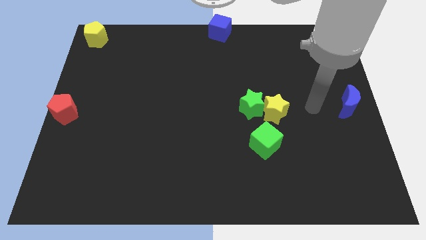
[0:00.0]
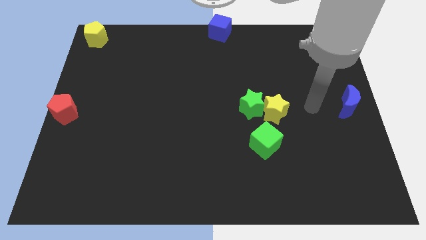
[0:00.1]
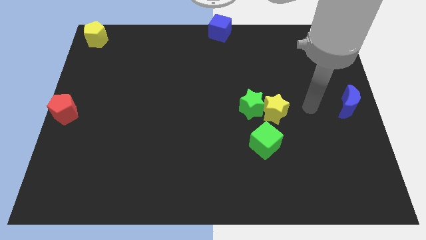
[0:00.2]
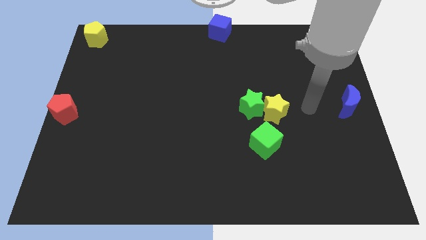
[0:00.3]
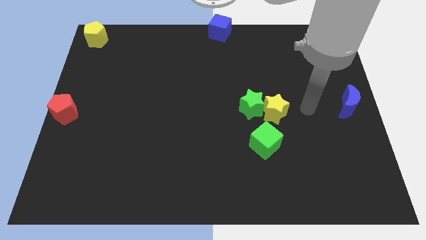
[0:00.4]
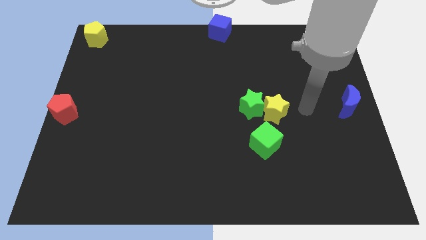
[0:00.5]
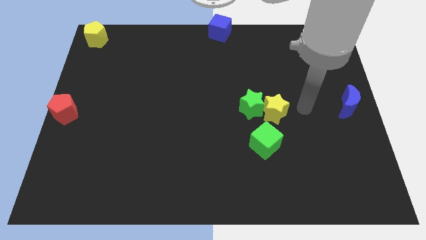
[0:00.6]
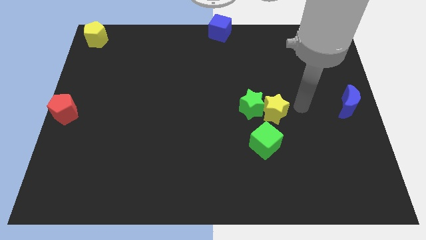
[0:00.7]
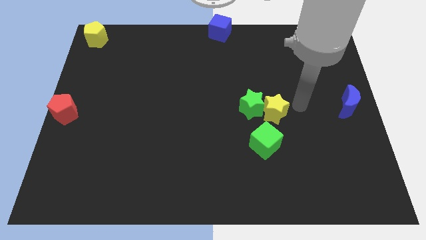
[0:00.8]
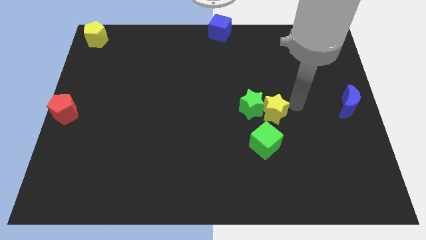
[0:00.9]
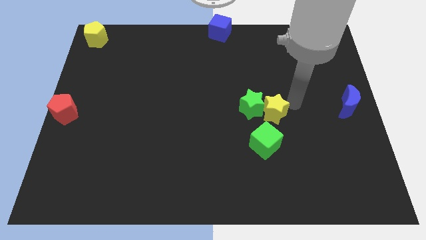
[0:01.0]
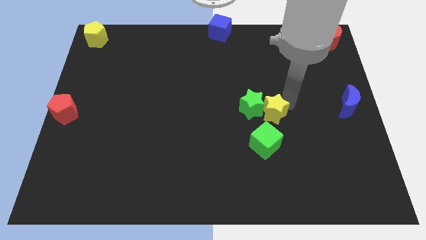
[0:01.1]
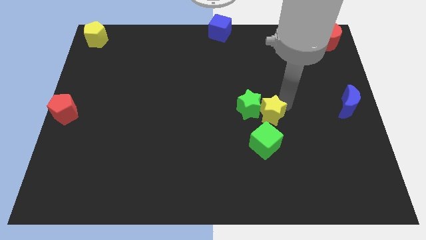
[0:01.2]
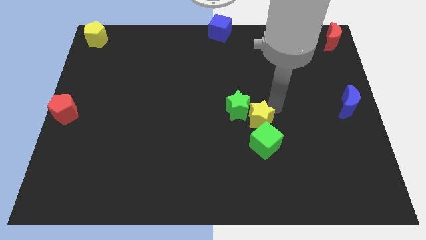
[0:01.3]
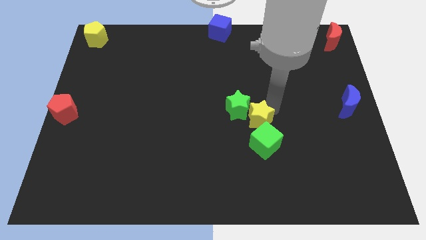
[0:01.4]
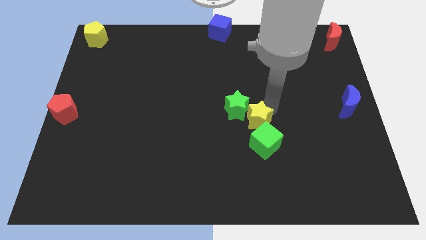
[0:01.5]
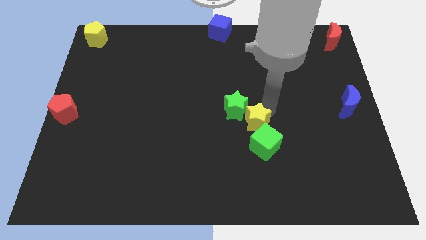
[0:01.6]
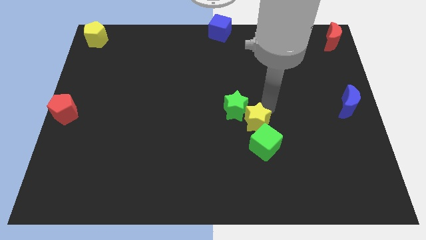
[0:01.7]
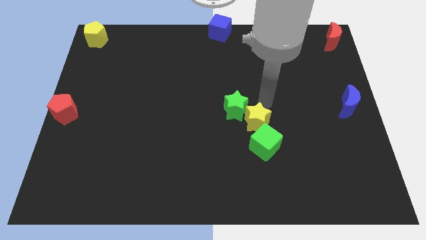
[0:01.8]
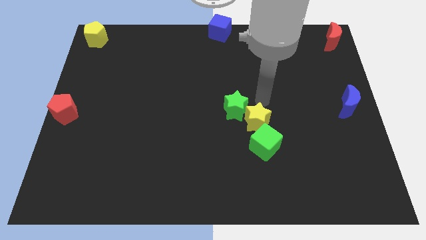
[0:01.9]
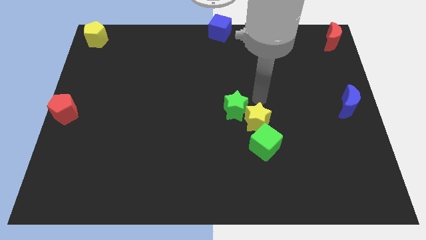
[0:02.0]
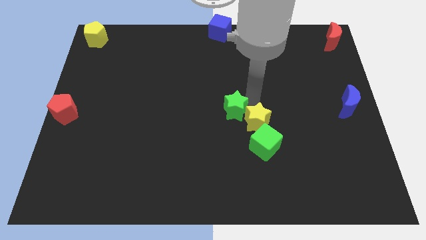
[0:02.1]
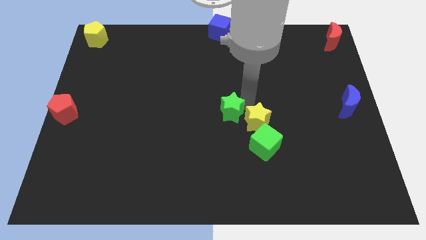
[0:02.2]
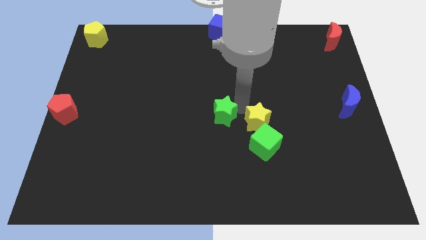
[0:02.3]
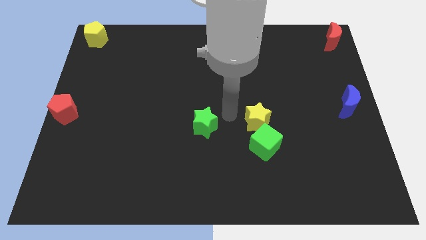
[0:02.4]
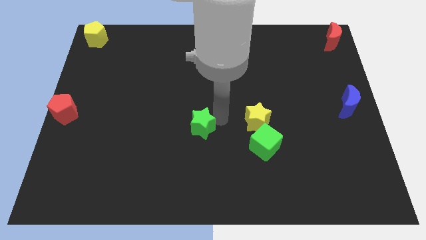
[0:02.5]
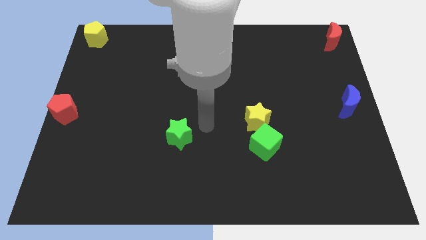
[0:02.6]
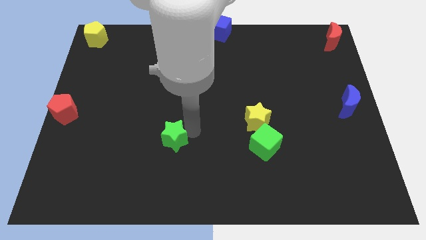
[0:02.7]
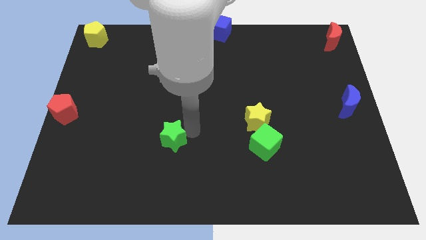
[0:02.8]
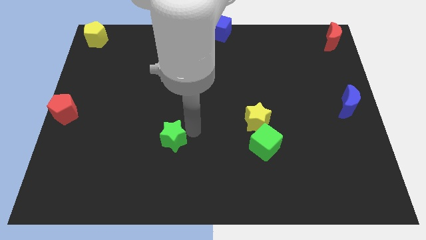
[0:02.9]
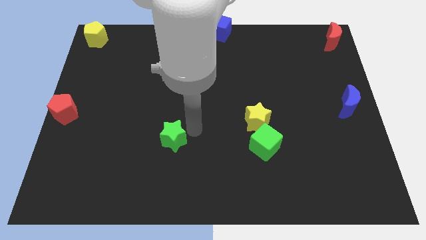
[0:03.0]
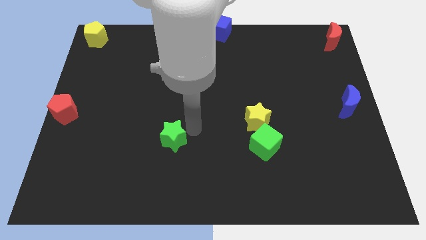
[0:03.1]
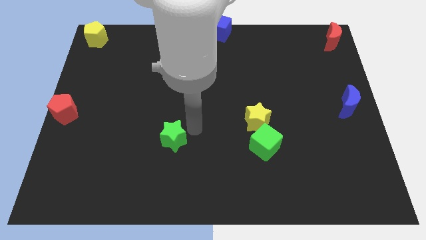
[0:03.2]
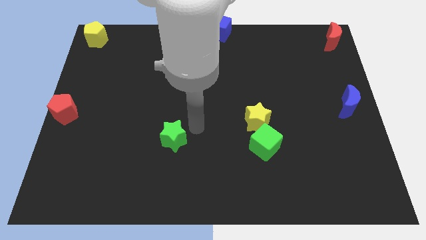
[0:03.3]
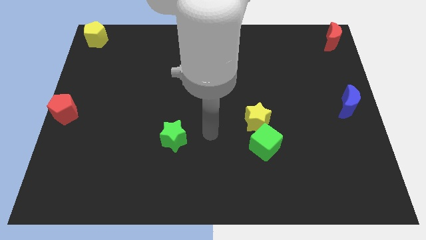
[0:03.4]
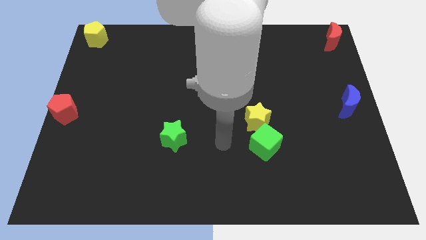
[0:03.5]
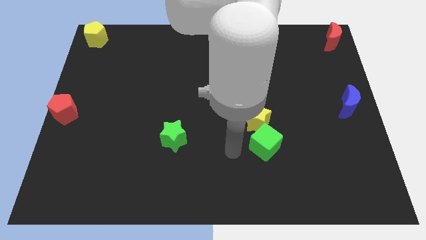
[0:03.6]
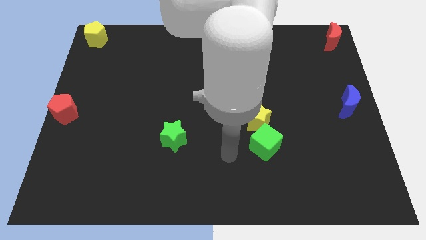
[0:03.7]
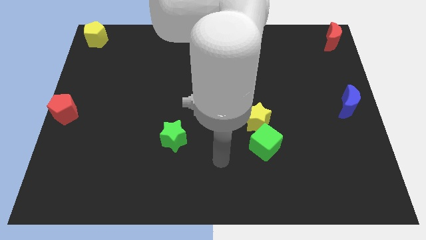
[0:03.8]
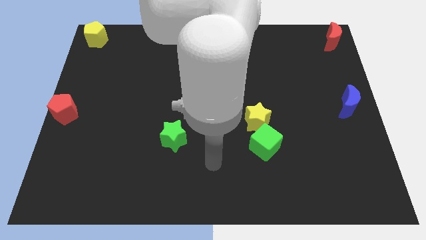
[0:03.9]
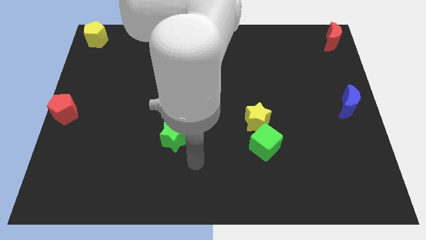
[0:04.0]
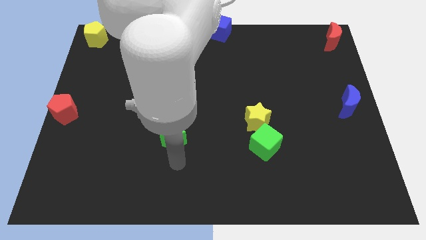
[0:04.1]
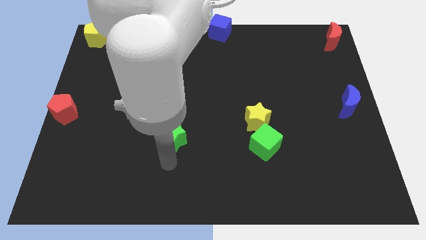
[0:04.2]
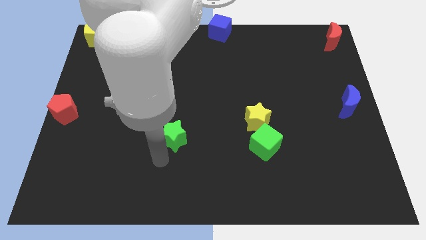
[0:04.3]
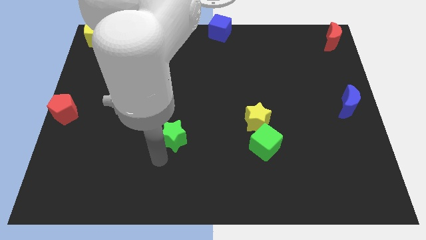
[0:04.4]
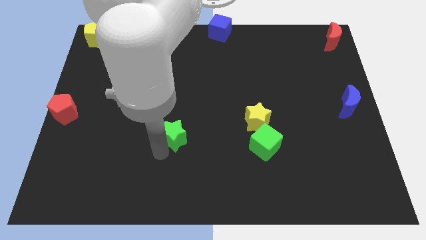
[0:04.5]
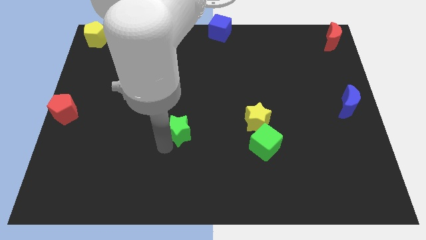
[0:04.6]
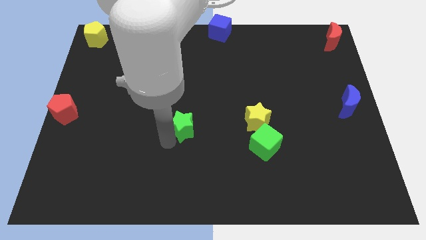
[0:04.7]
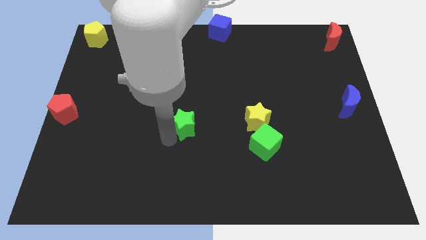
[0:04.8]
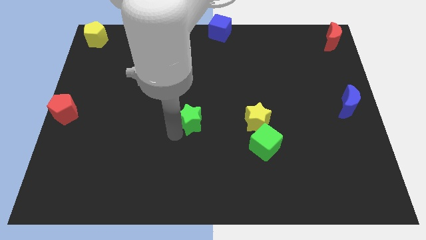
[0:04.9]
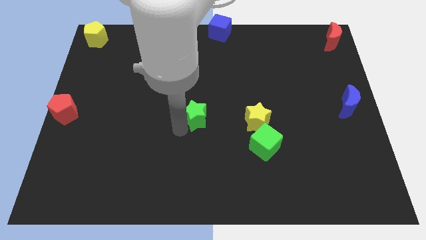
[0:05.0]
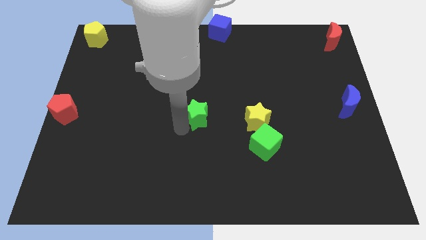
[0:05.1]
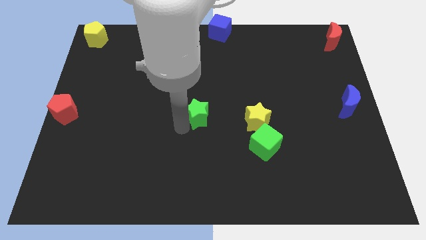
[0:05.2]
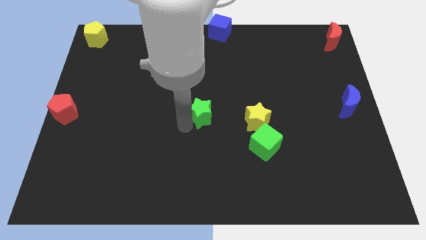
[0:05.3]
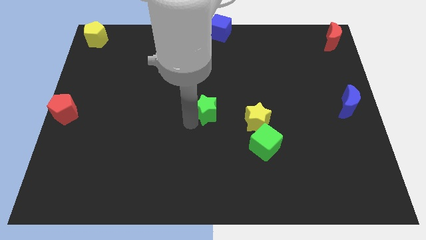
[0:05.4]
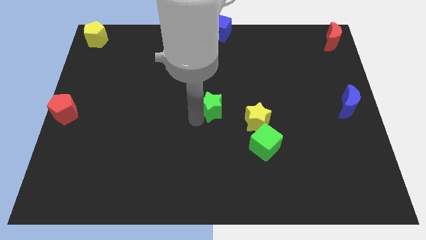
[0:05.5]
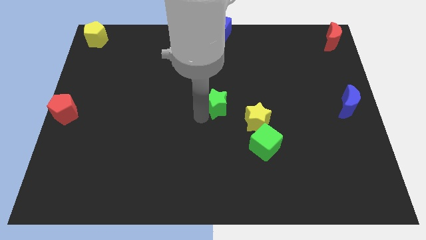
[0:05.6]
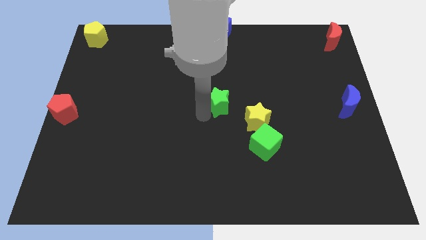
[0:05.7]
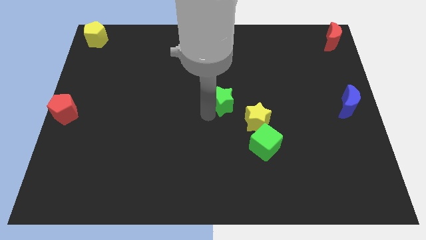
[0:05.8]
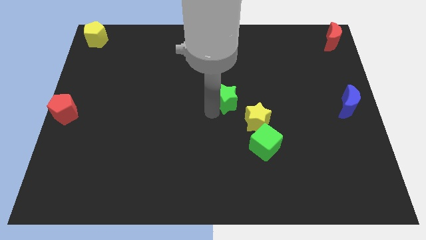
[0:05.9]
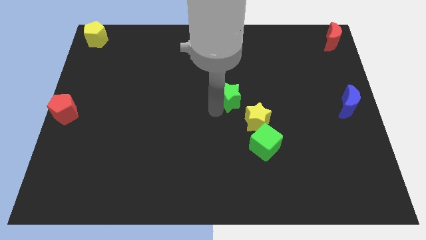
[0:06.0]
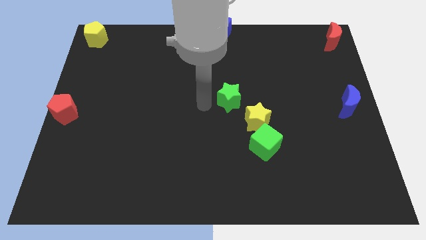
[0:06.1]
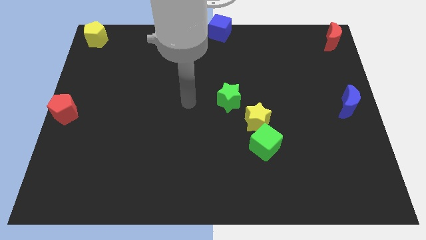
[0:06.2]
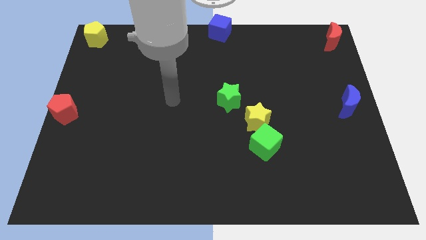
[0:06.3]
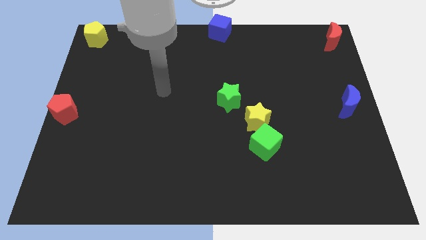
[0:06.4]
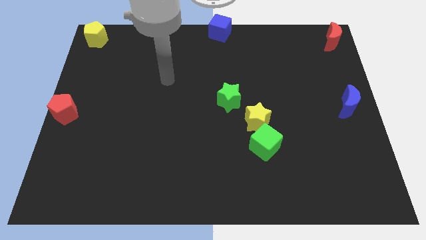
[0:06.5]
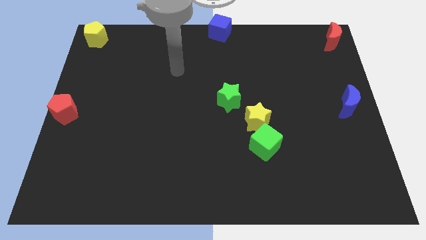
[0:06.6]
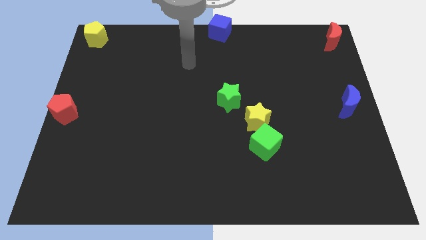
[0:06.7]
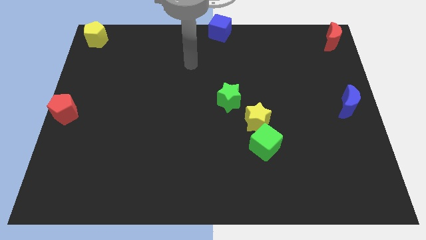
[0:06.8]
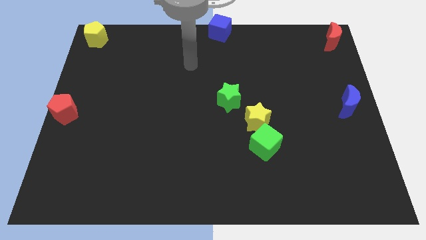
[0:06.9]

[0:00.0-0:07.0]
move the green star to the center of the board

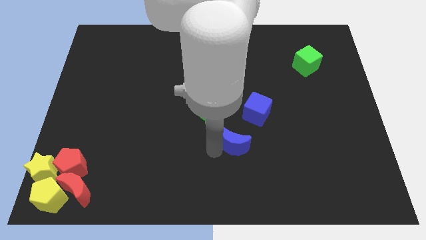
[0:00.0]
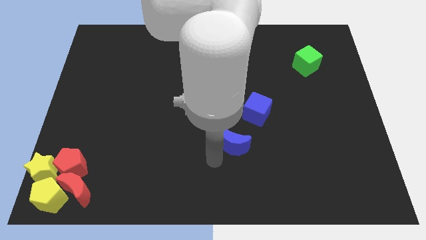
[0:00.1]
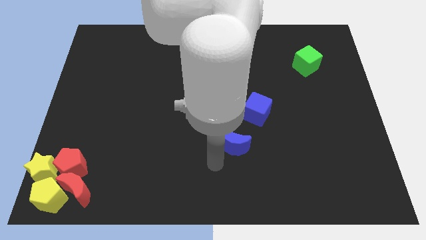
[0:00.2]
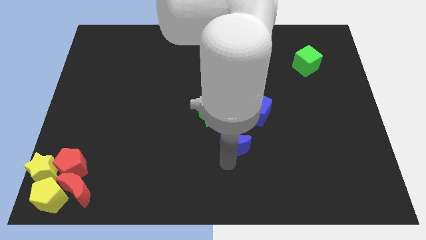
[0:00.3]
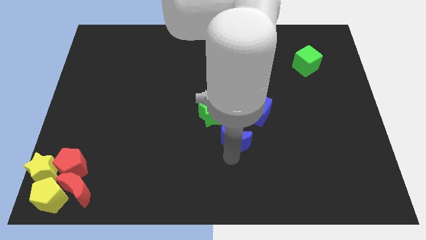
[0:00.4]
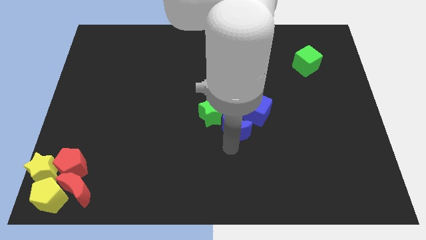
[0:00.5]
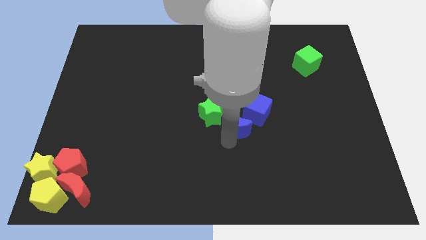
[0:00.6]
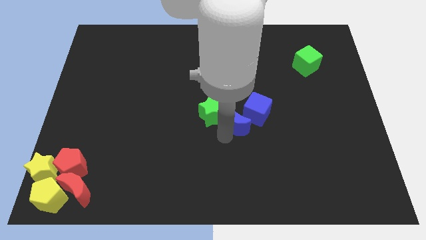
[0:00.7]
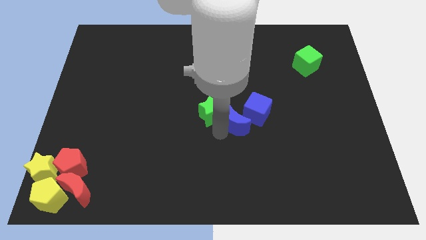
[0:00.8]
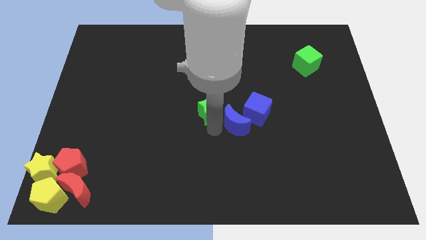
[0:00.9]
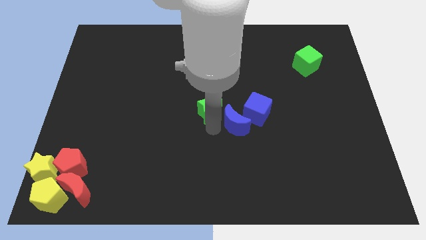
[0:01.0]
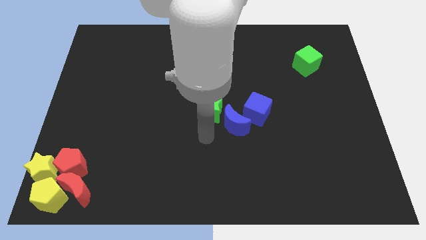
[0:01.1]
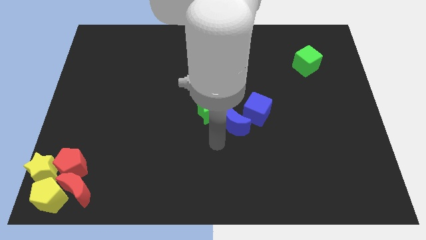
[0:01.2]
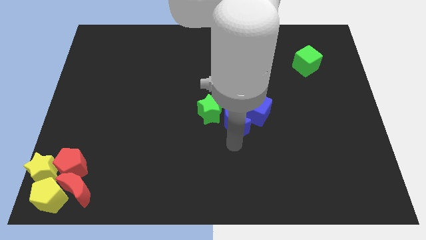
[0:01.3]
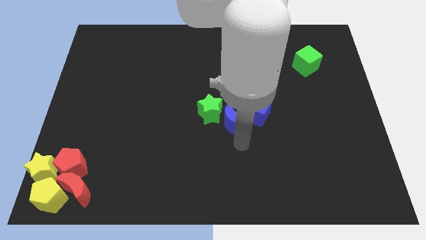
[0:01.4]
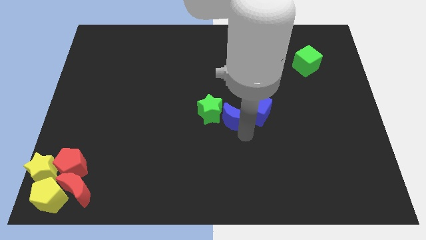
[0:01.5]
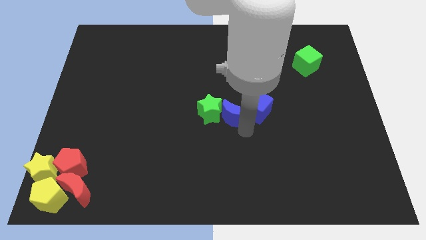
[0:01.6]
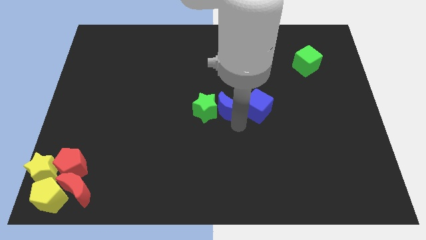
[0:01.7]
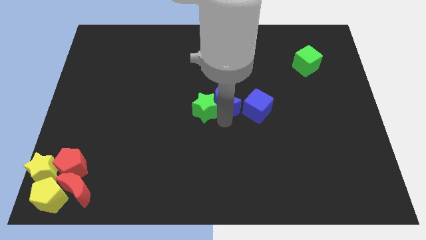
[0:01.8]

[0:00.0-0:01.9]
put the blue moon between the green star and blue cube
